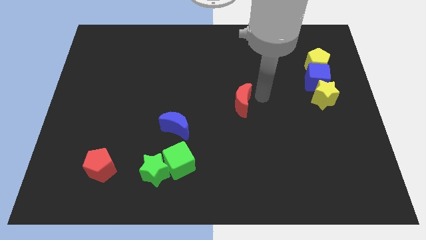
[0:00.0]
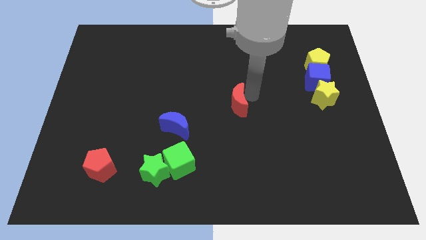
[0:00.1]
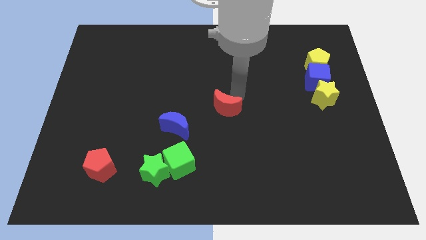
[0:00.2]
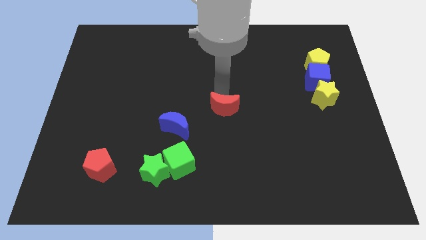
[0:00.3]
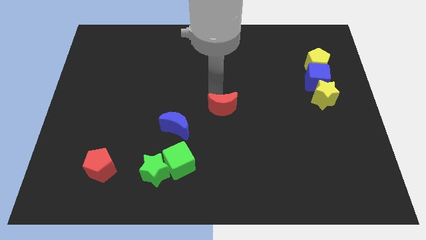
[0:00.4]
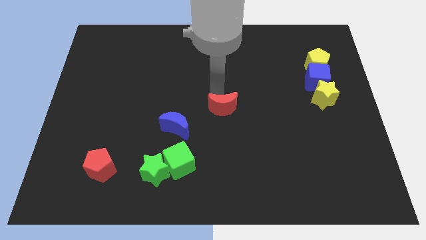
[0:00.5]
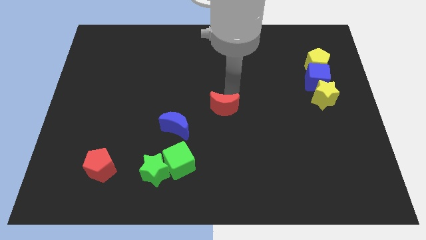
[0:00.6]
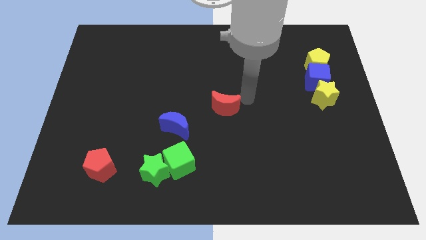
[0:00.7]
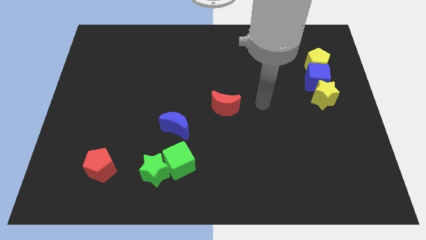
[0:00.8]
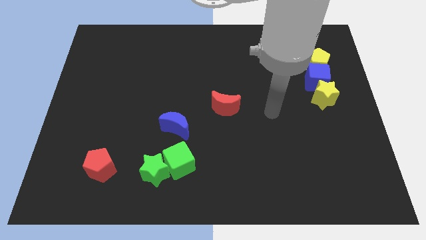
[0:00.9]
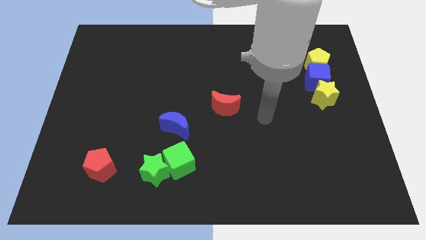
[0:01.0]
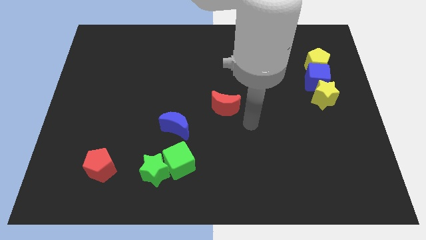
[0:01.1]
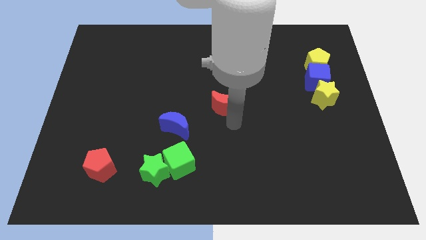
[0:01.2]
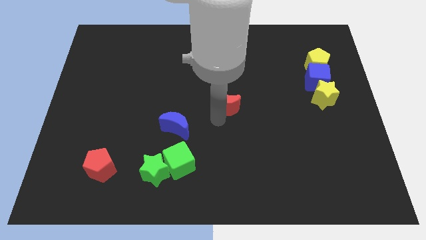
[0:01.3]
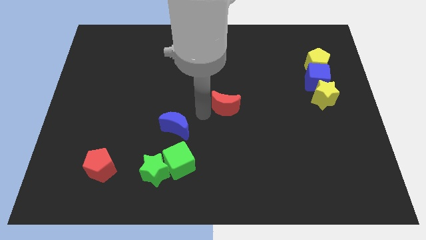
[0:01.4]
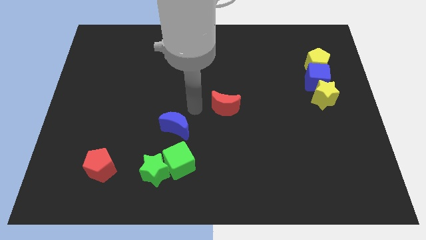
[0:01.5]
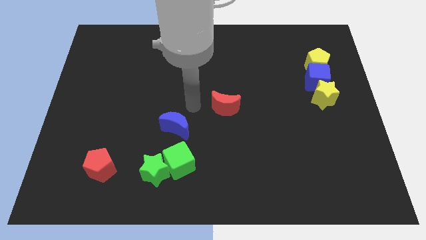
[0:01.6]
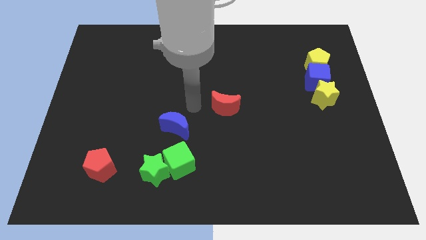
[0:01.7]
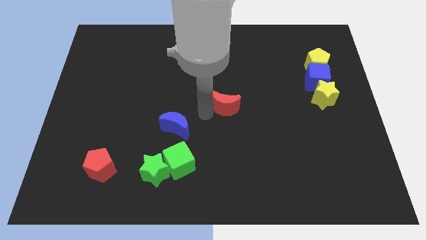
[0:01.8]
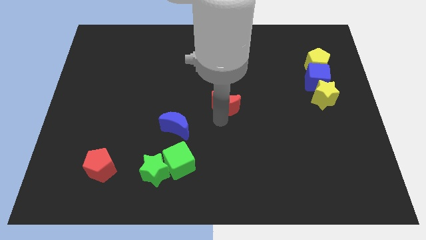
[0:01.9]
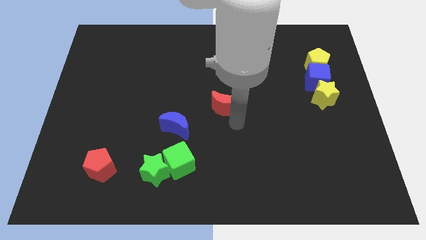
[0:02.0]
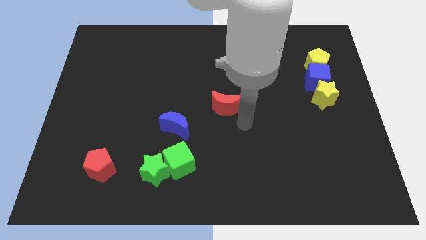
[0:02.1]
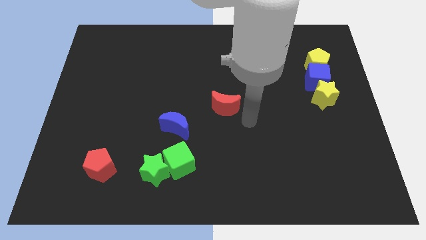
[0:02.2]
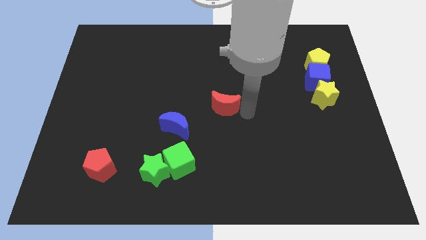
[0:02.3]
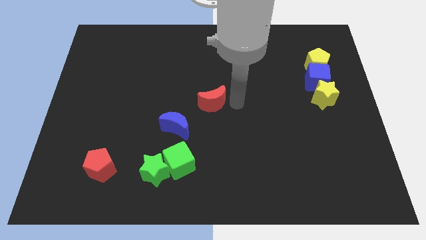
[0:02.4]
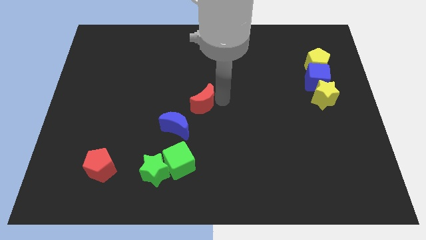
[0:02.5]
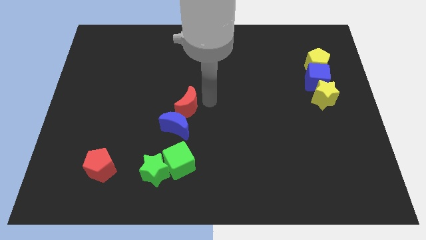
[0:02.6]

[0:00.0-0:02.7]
place the red moon above the blue moon

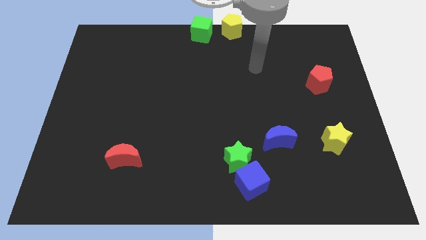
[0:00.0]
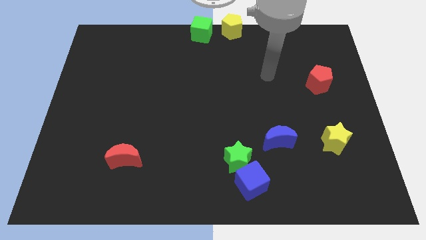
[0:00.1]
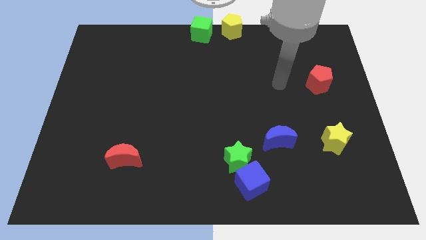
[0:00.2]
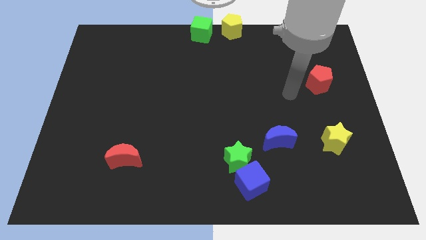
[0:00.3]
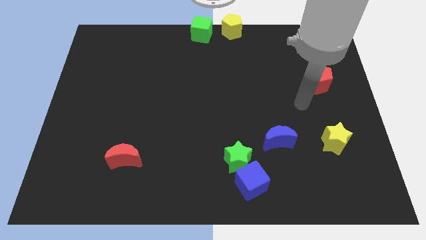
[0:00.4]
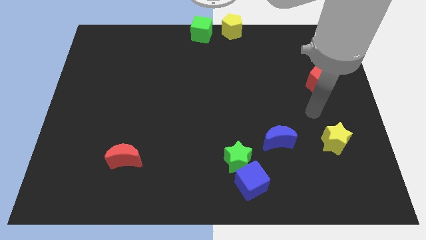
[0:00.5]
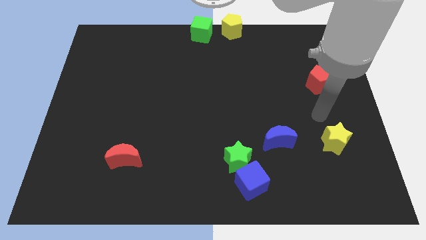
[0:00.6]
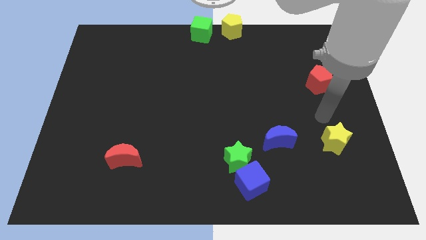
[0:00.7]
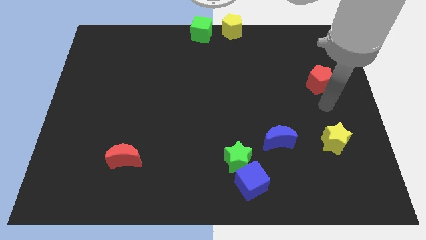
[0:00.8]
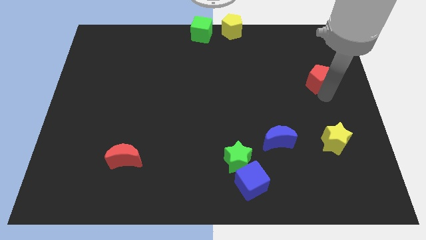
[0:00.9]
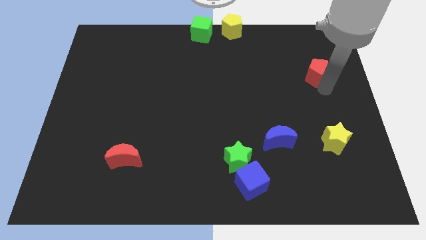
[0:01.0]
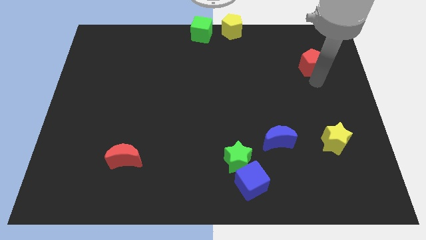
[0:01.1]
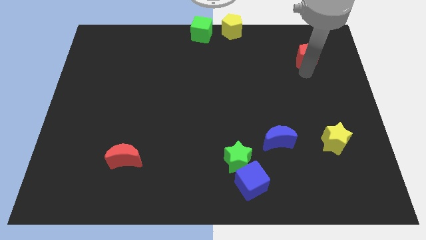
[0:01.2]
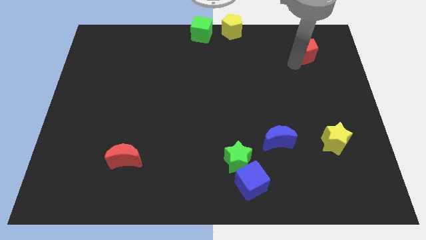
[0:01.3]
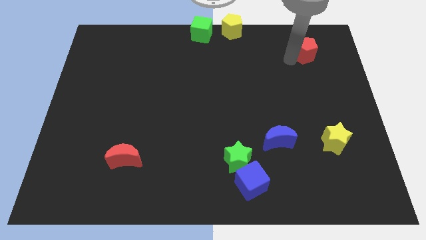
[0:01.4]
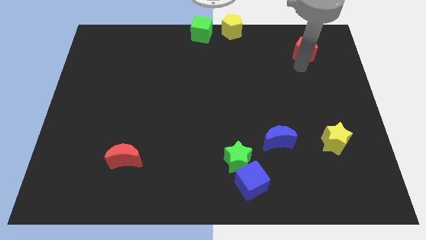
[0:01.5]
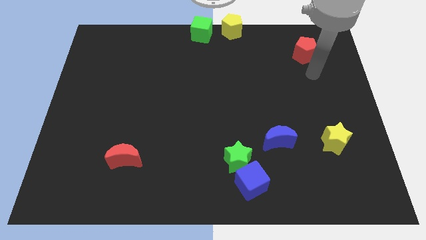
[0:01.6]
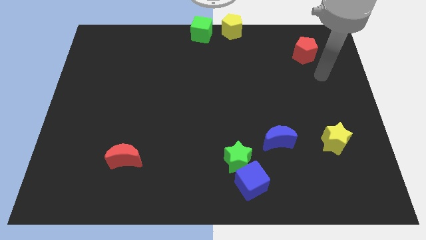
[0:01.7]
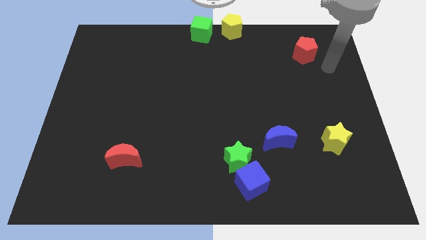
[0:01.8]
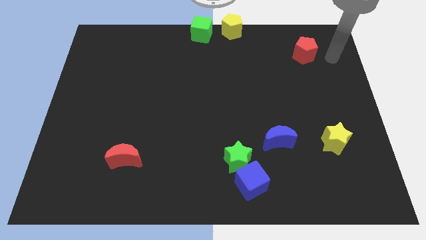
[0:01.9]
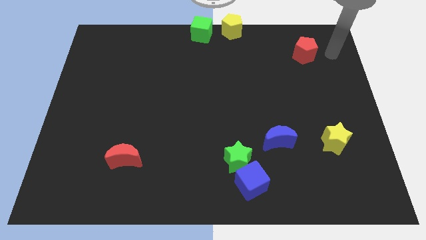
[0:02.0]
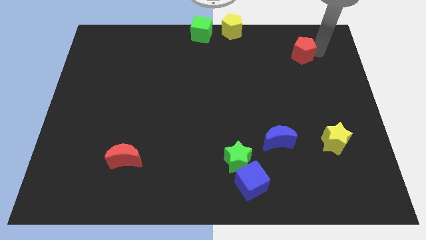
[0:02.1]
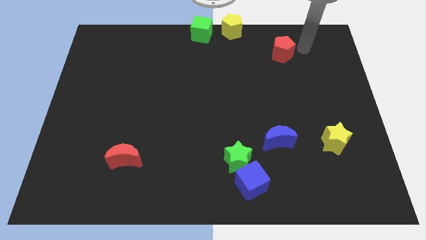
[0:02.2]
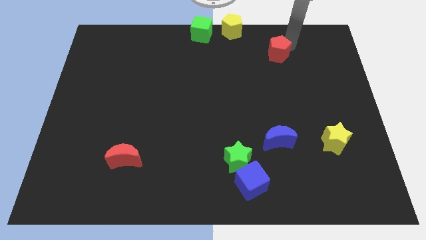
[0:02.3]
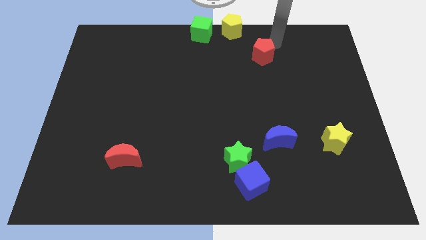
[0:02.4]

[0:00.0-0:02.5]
move the red pentagon vertical above blue moon

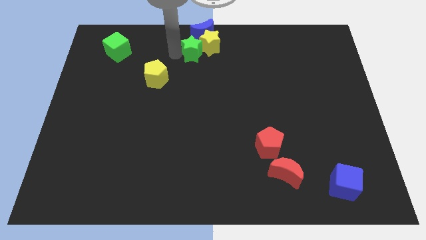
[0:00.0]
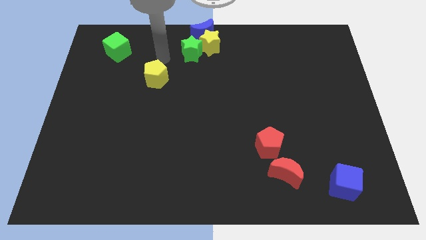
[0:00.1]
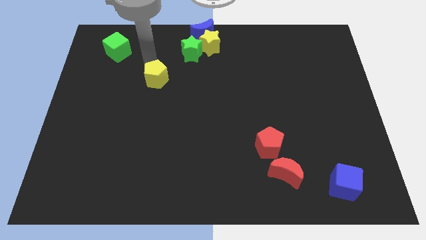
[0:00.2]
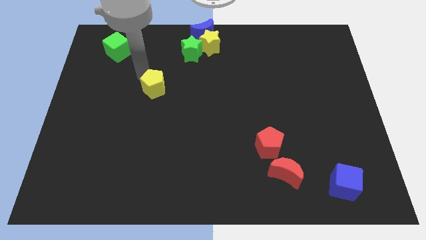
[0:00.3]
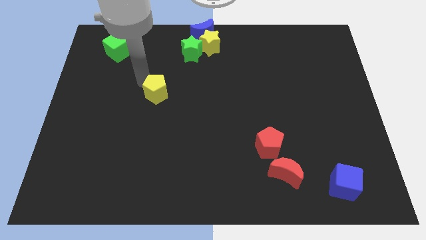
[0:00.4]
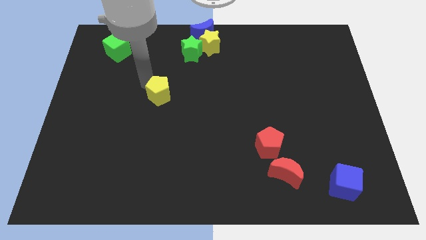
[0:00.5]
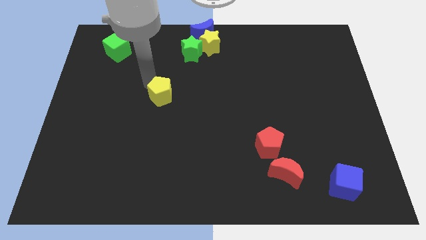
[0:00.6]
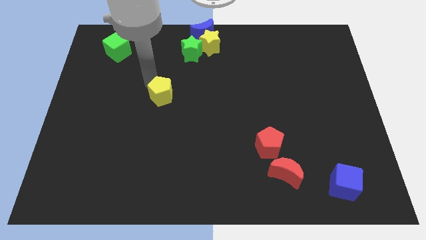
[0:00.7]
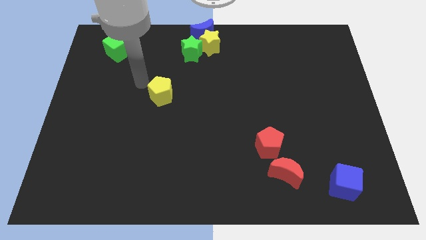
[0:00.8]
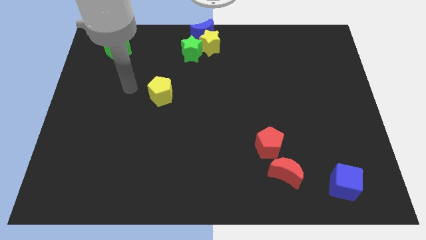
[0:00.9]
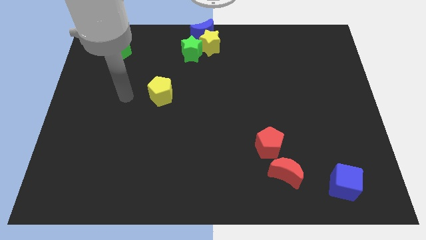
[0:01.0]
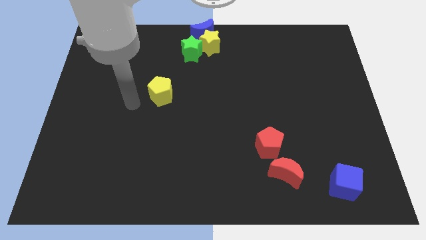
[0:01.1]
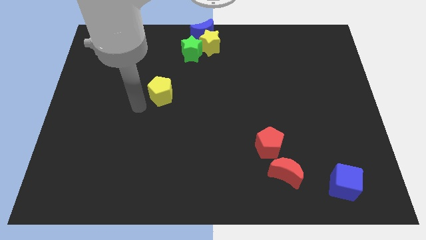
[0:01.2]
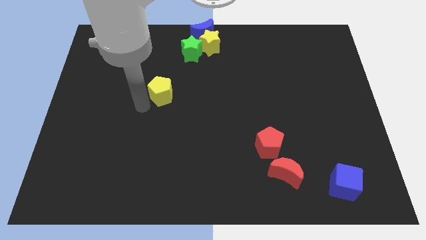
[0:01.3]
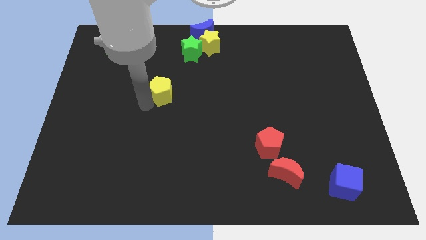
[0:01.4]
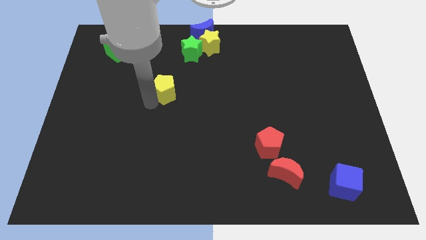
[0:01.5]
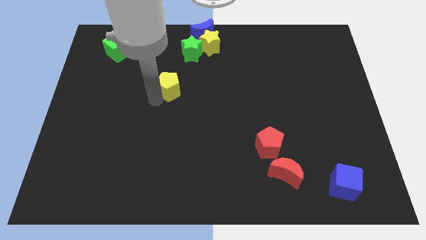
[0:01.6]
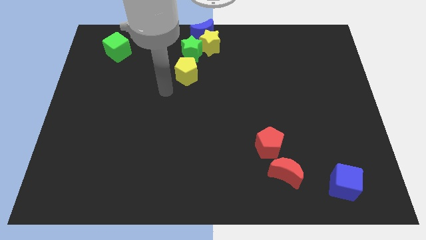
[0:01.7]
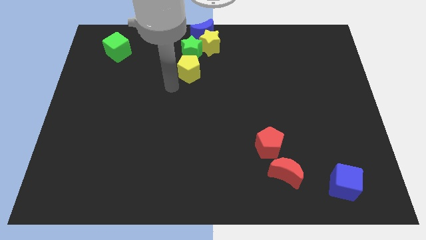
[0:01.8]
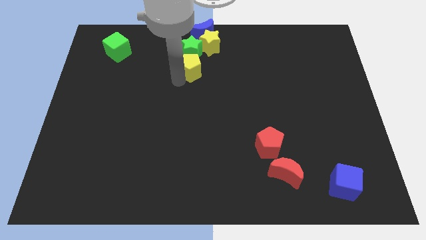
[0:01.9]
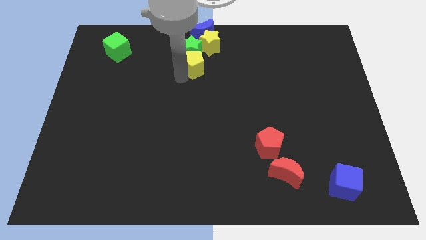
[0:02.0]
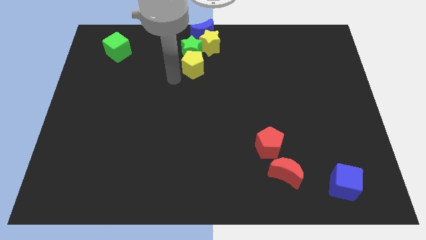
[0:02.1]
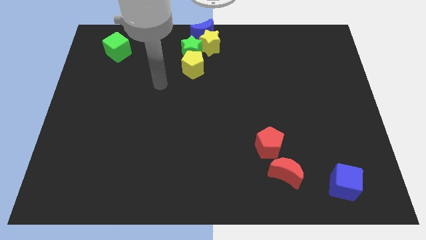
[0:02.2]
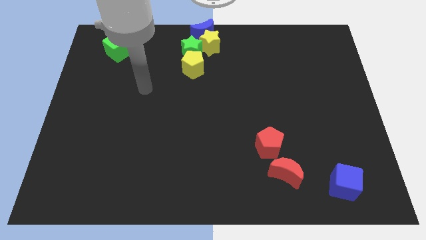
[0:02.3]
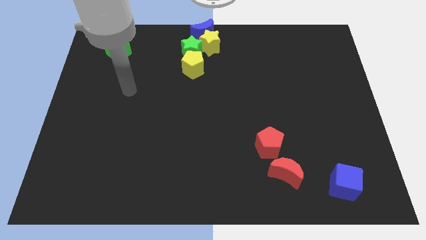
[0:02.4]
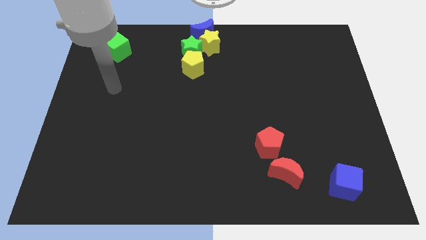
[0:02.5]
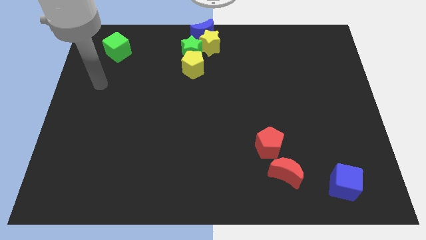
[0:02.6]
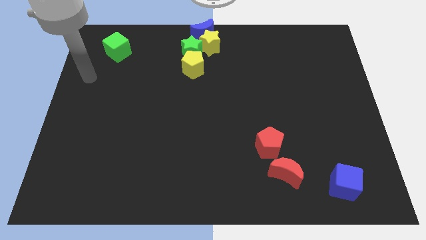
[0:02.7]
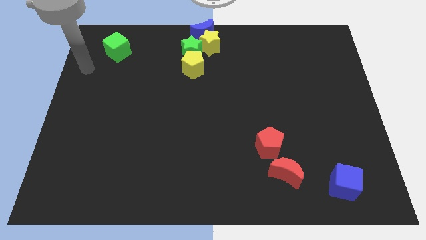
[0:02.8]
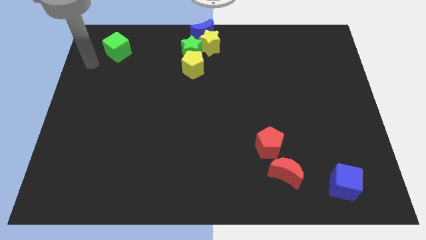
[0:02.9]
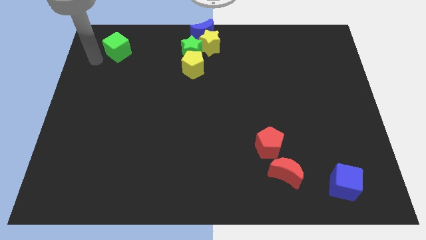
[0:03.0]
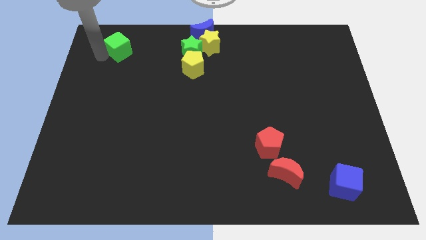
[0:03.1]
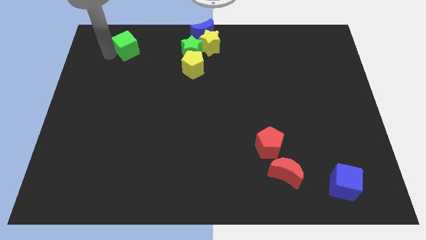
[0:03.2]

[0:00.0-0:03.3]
place the yellow pentagon vertically below the green star

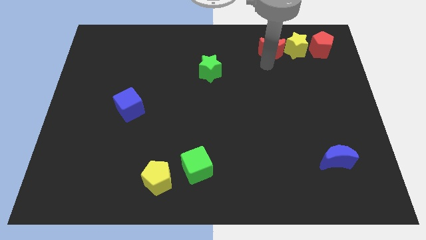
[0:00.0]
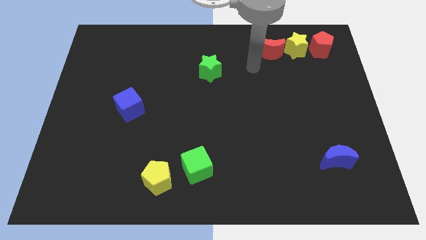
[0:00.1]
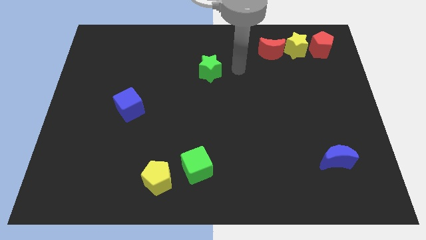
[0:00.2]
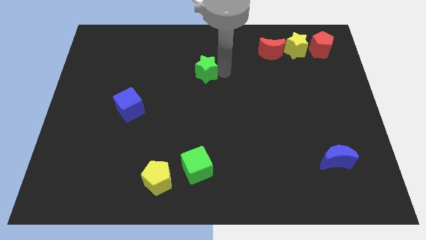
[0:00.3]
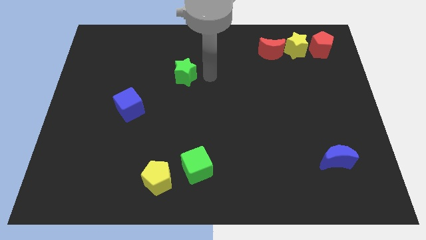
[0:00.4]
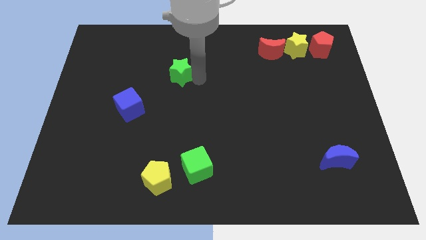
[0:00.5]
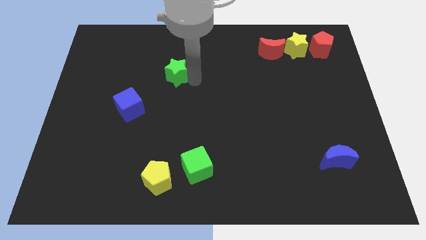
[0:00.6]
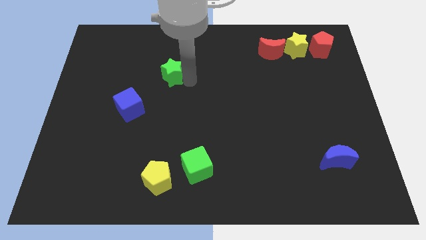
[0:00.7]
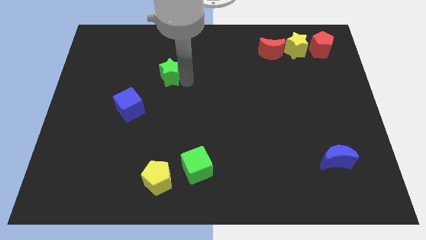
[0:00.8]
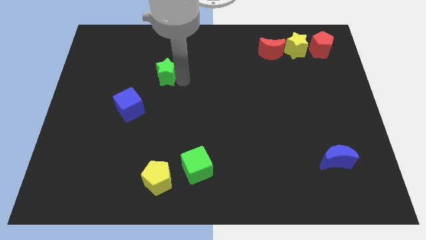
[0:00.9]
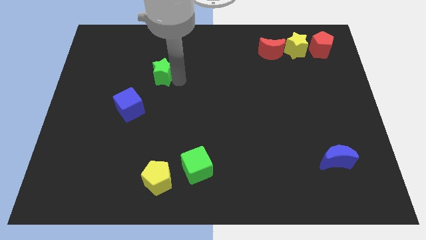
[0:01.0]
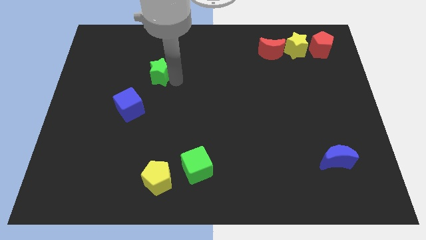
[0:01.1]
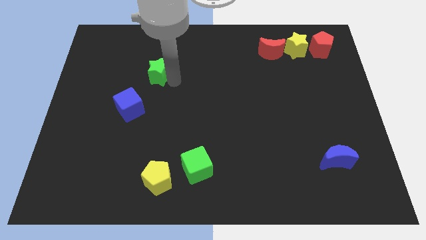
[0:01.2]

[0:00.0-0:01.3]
slightly move the green star towards the left
